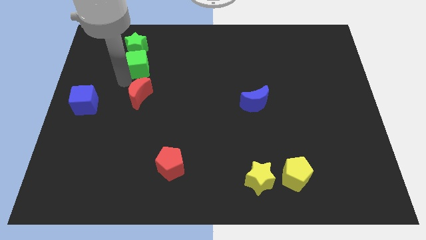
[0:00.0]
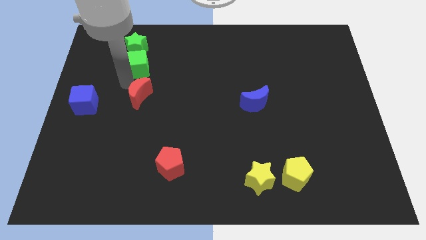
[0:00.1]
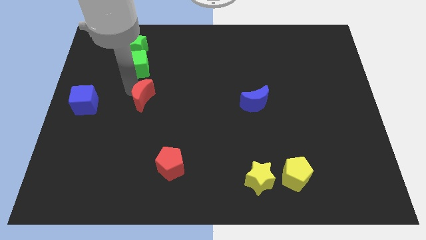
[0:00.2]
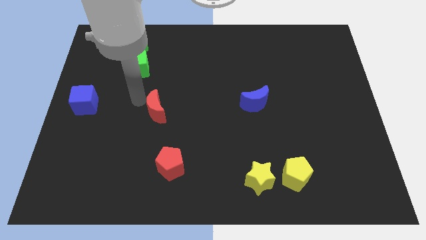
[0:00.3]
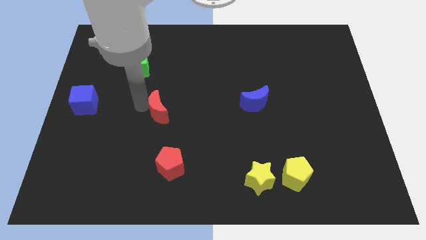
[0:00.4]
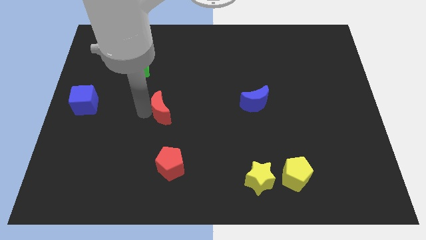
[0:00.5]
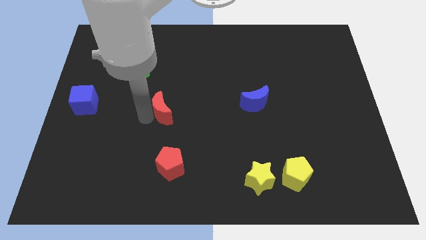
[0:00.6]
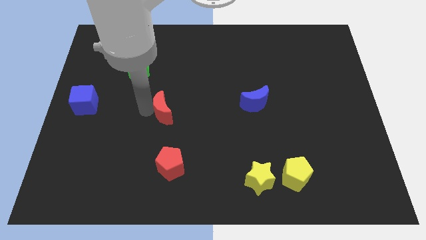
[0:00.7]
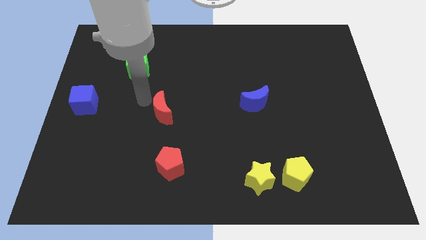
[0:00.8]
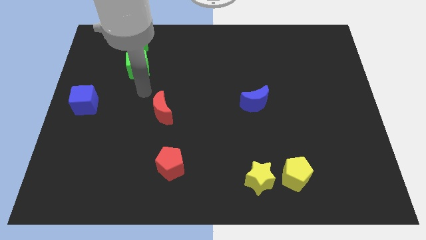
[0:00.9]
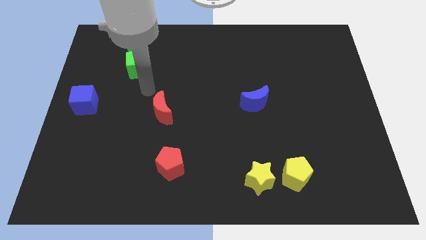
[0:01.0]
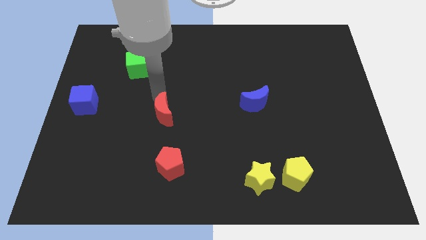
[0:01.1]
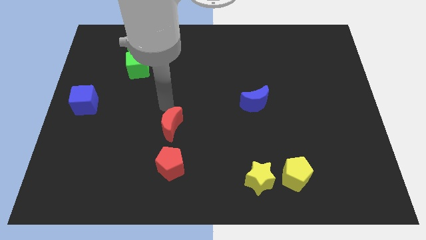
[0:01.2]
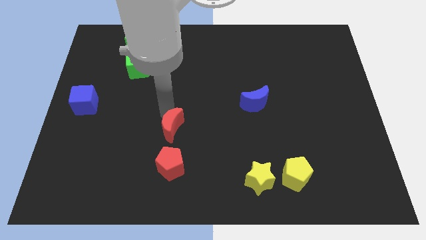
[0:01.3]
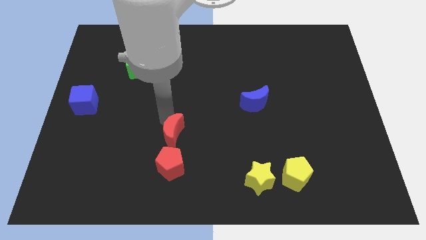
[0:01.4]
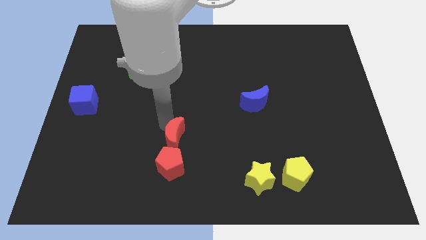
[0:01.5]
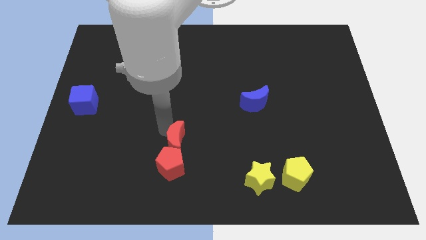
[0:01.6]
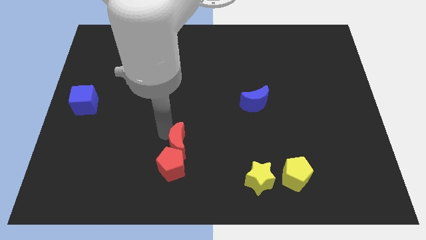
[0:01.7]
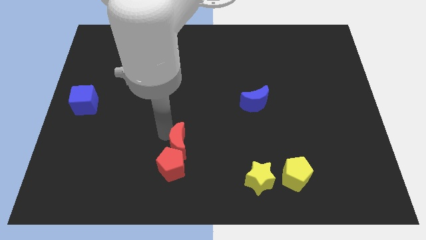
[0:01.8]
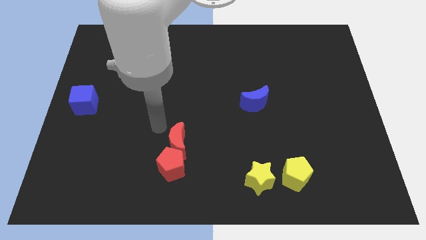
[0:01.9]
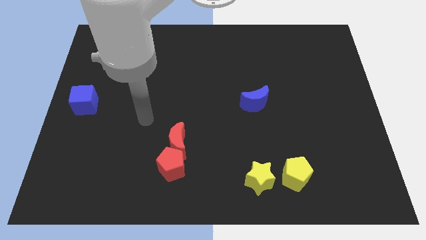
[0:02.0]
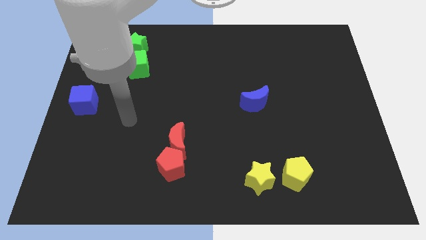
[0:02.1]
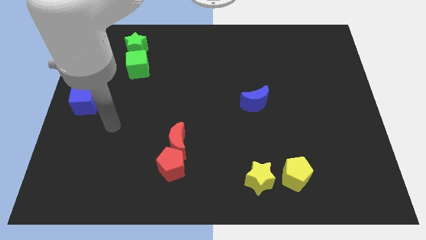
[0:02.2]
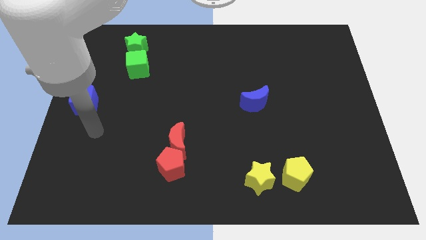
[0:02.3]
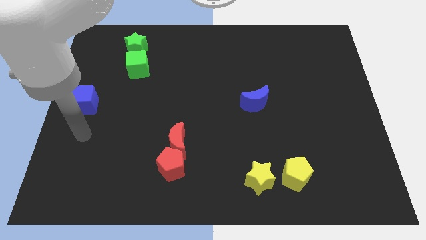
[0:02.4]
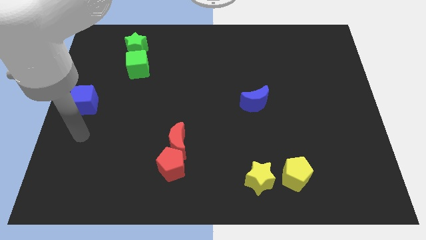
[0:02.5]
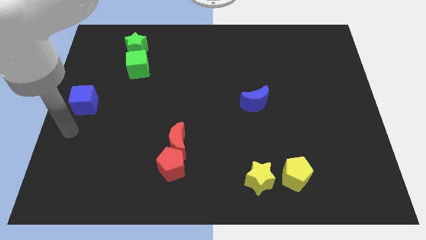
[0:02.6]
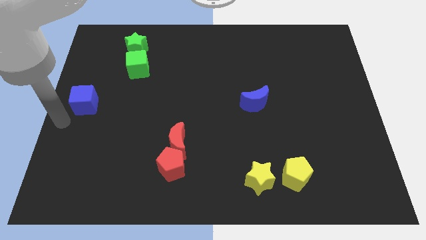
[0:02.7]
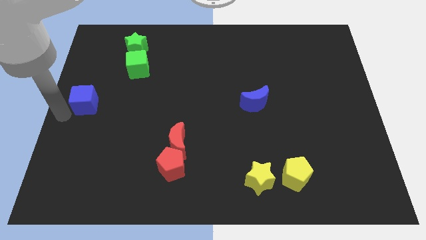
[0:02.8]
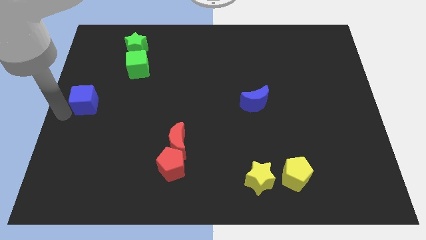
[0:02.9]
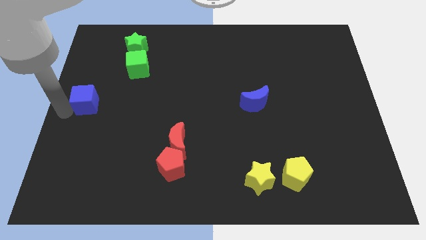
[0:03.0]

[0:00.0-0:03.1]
place red moon to the top of red pentagon

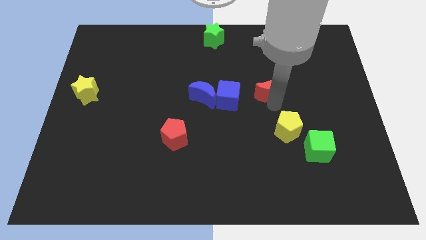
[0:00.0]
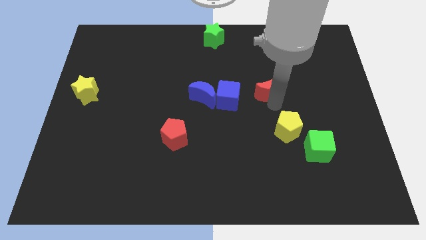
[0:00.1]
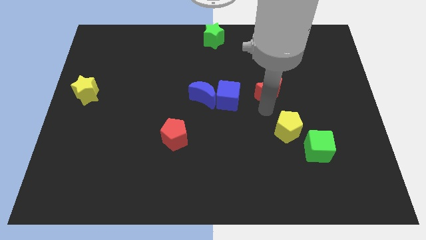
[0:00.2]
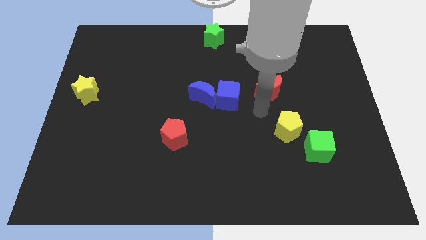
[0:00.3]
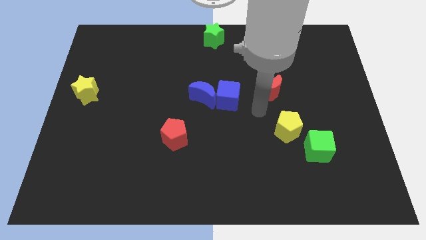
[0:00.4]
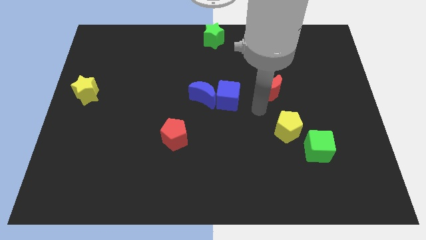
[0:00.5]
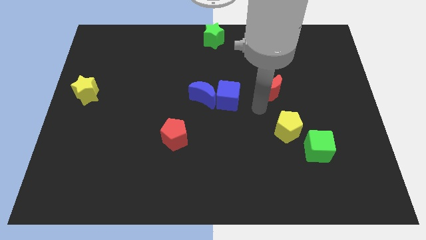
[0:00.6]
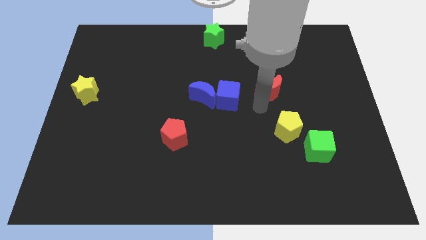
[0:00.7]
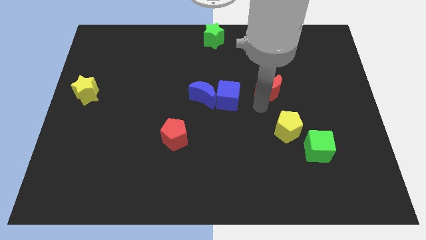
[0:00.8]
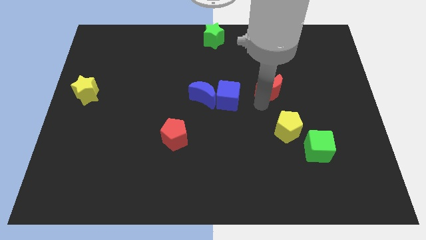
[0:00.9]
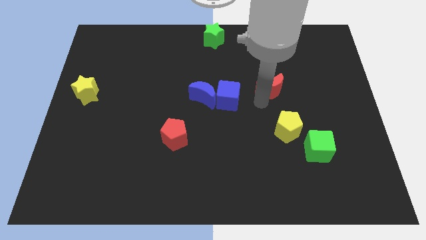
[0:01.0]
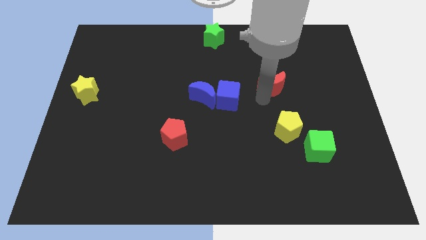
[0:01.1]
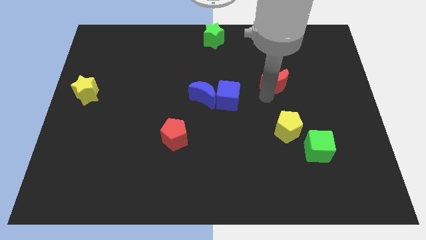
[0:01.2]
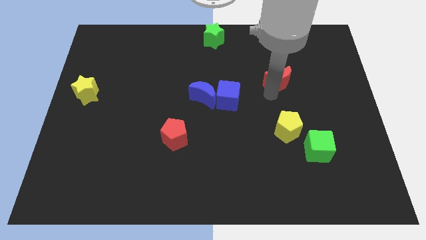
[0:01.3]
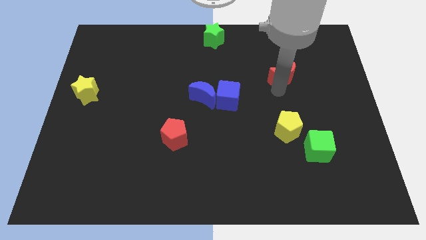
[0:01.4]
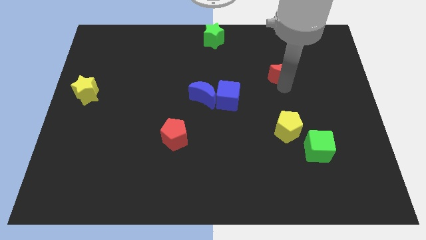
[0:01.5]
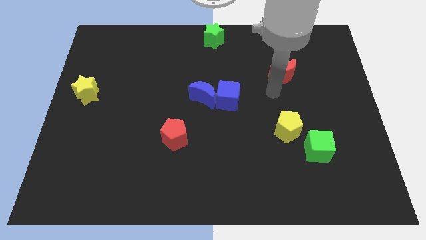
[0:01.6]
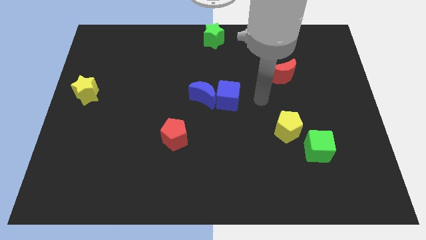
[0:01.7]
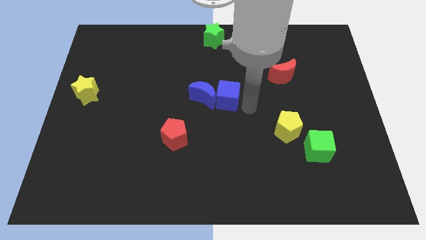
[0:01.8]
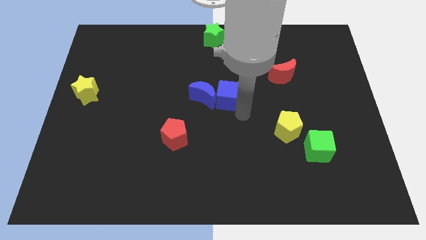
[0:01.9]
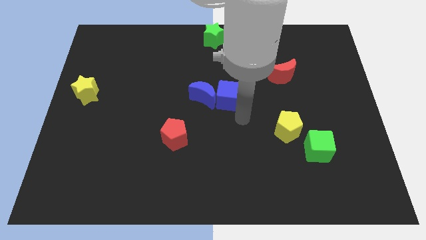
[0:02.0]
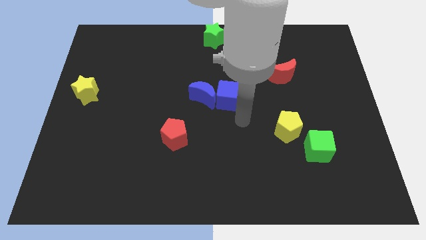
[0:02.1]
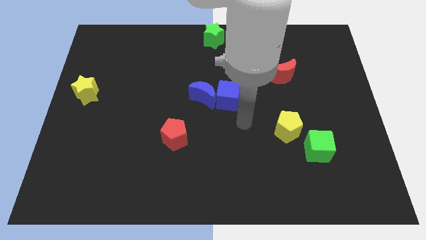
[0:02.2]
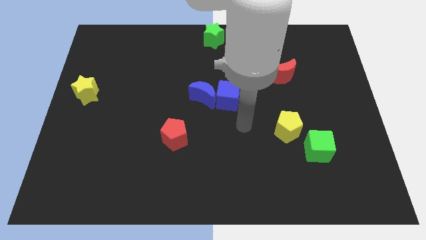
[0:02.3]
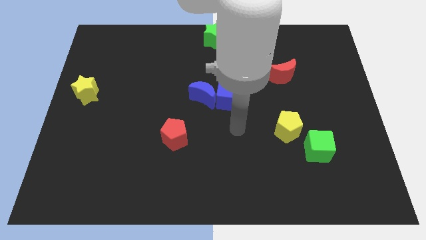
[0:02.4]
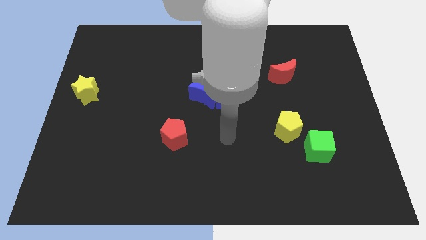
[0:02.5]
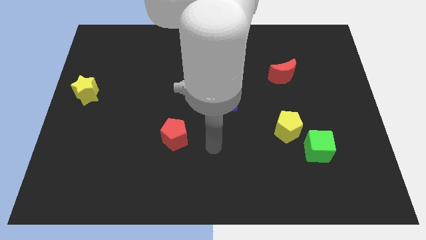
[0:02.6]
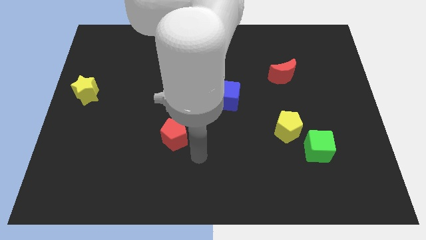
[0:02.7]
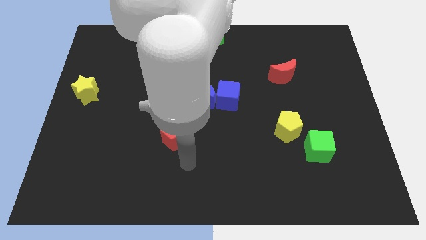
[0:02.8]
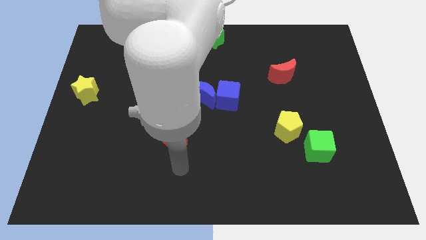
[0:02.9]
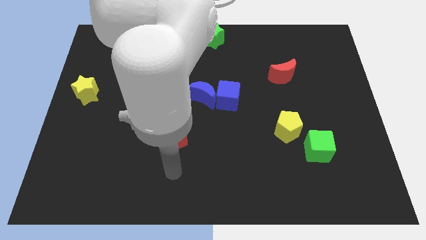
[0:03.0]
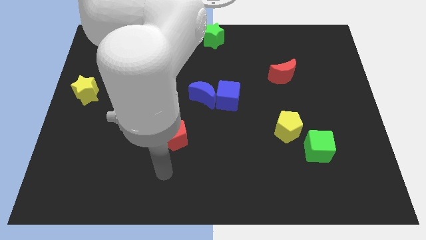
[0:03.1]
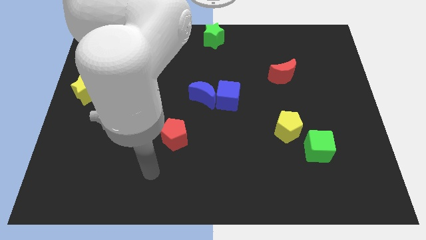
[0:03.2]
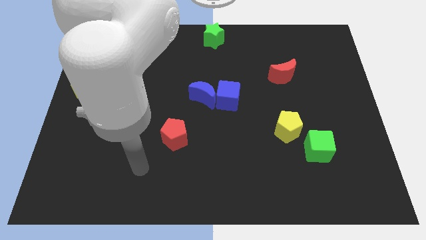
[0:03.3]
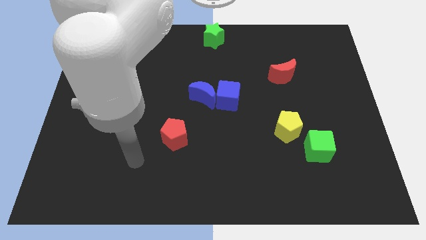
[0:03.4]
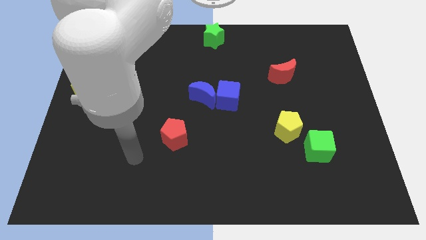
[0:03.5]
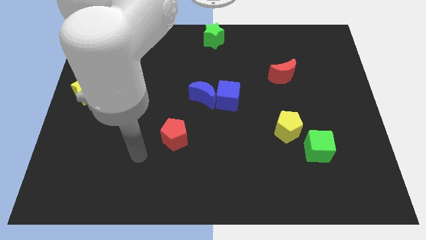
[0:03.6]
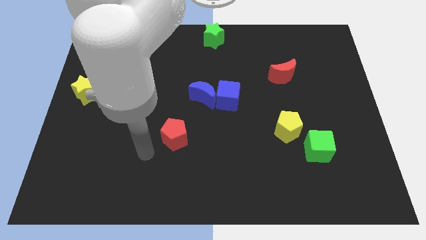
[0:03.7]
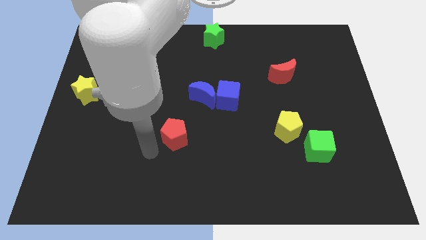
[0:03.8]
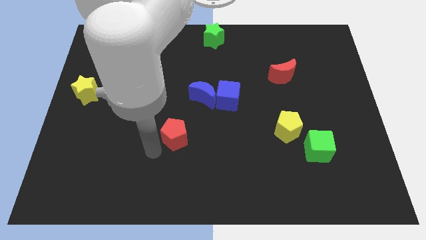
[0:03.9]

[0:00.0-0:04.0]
place the red moon diagonally top right to the blue cube

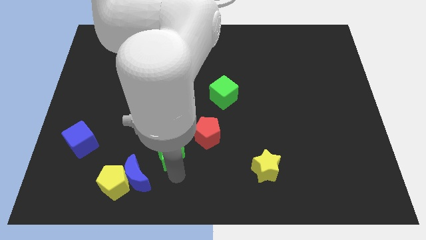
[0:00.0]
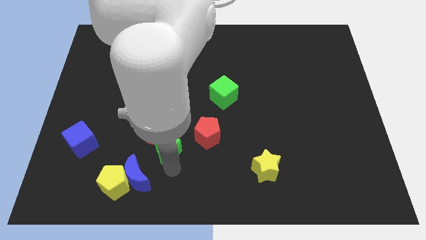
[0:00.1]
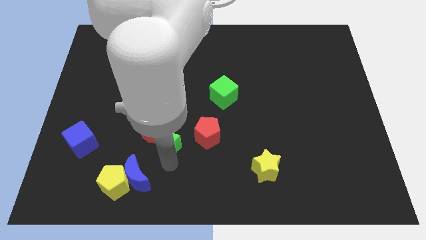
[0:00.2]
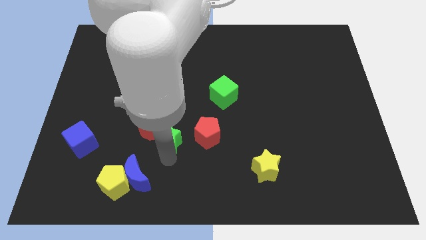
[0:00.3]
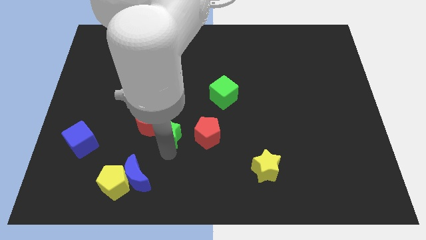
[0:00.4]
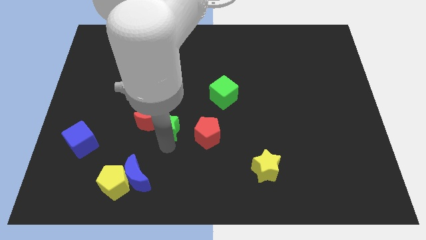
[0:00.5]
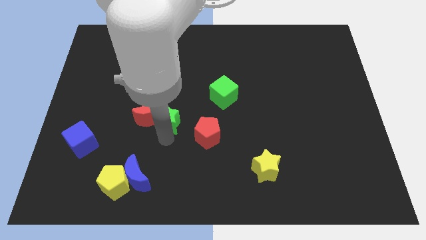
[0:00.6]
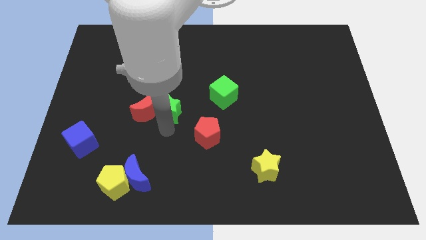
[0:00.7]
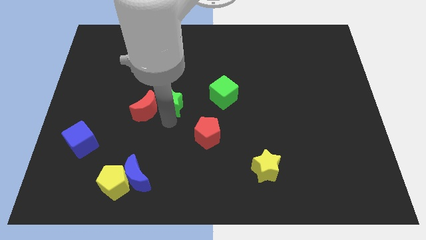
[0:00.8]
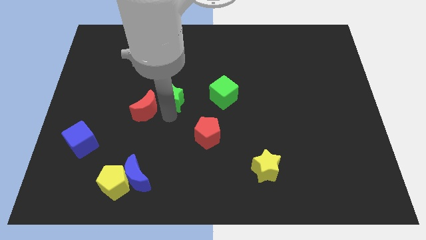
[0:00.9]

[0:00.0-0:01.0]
push green star beside red crescent

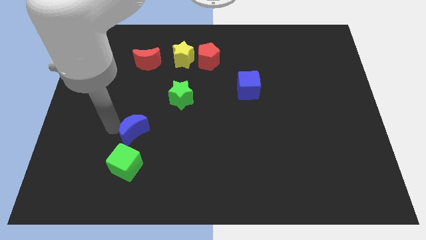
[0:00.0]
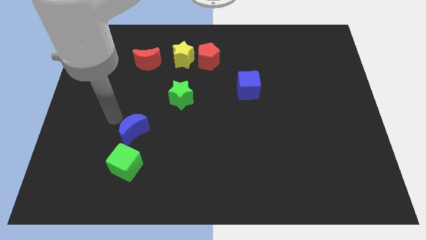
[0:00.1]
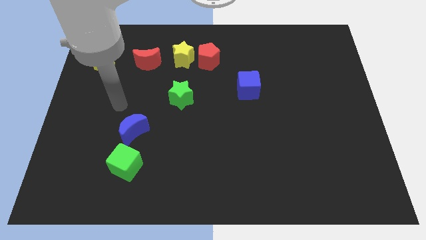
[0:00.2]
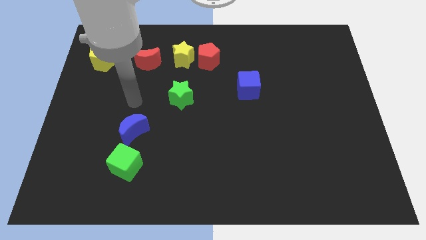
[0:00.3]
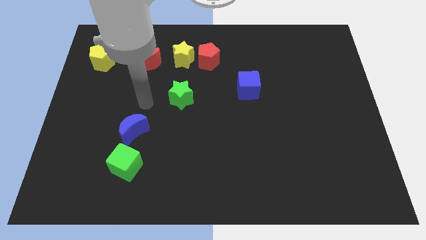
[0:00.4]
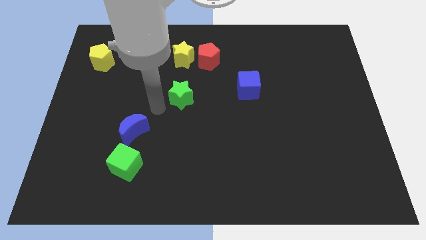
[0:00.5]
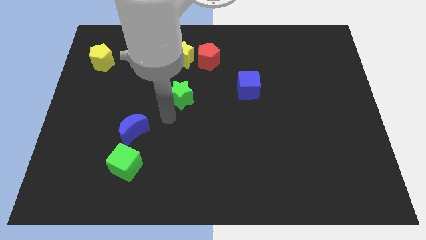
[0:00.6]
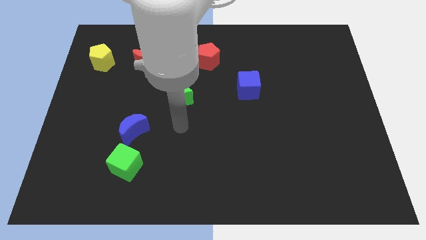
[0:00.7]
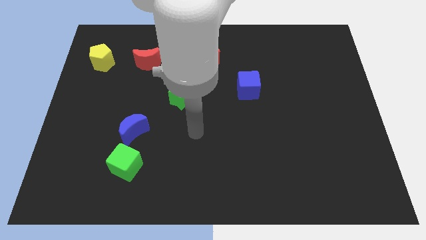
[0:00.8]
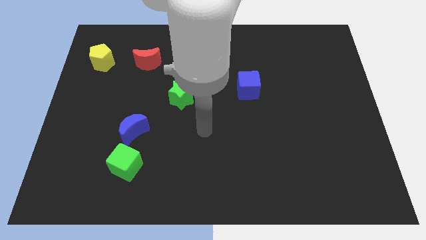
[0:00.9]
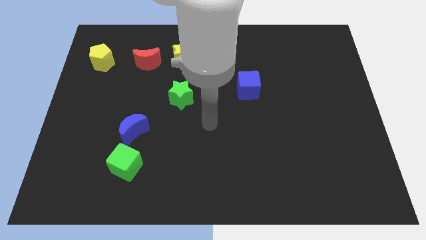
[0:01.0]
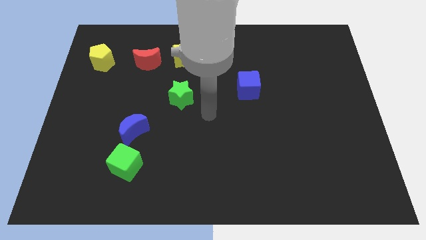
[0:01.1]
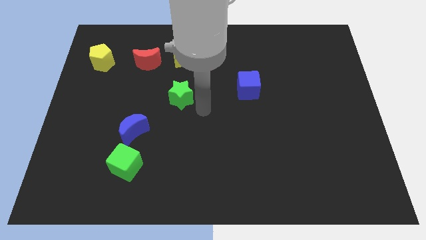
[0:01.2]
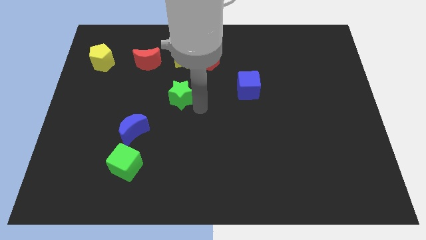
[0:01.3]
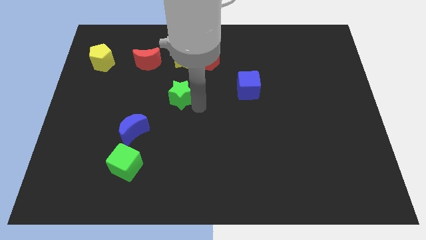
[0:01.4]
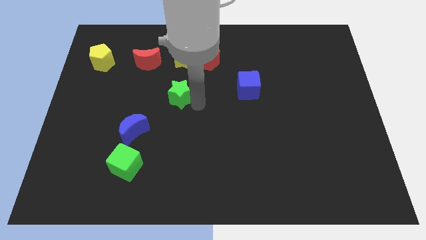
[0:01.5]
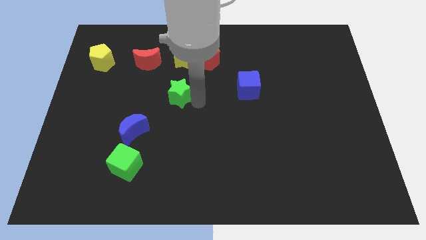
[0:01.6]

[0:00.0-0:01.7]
move your arm towards the green star
